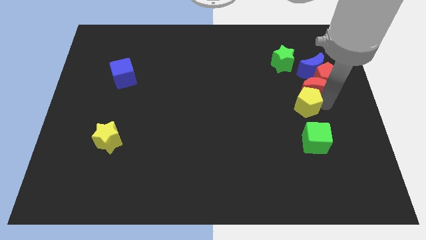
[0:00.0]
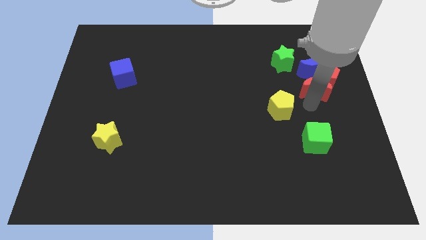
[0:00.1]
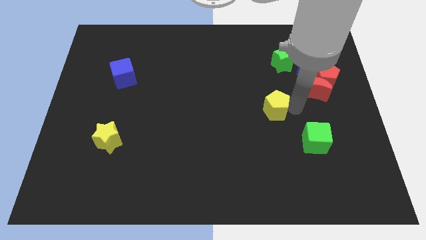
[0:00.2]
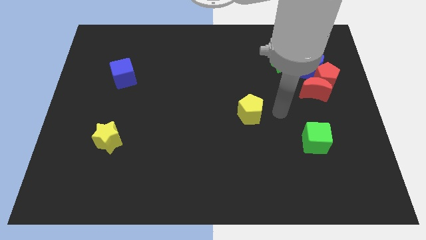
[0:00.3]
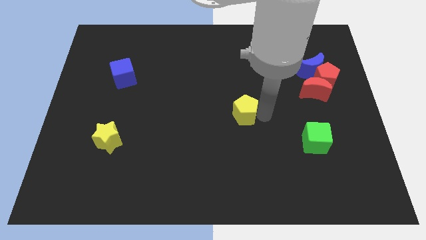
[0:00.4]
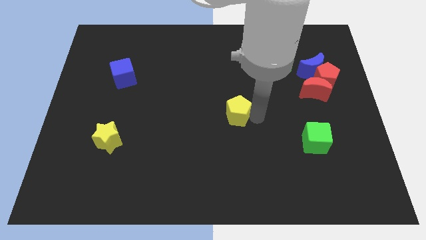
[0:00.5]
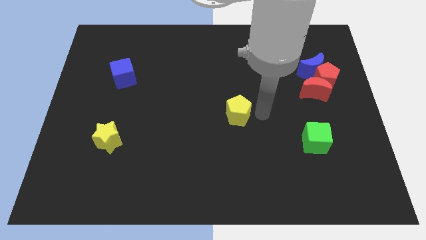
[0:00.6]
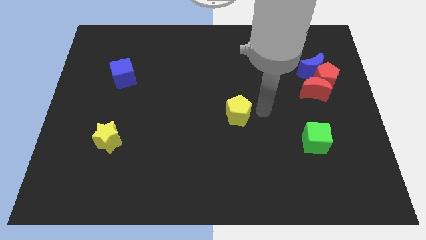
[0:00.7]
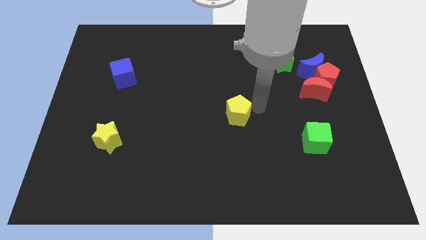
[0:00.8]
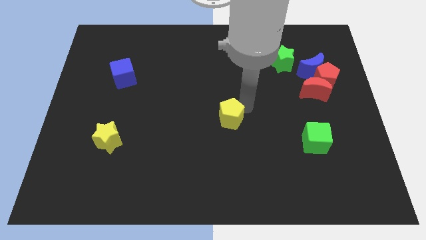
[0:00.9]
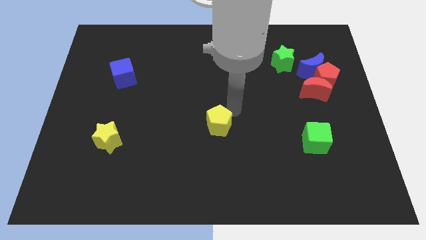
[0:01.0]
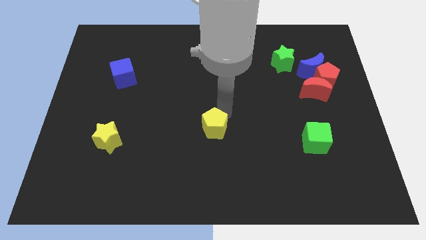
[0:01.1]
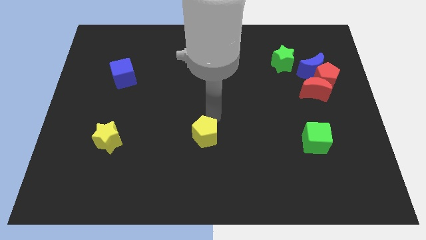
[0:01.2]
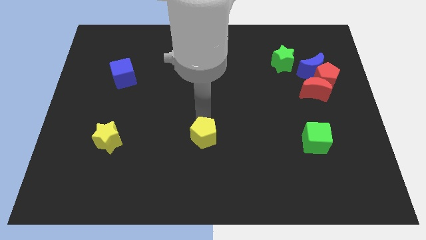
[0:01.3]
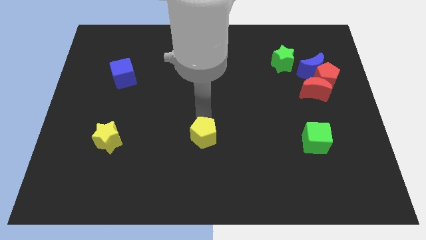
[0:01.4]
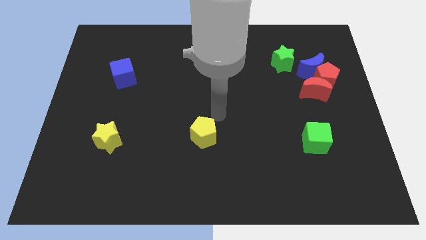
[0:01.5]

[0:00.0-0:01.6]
place the yellow pentagon in between the green cube and yellow star

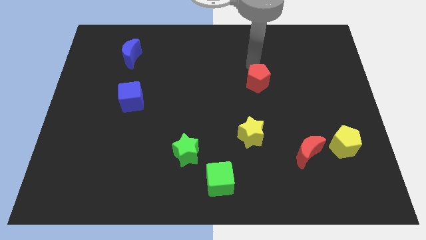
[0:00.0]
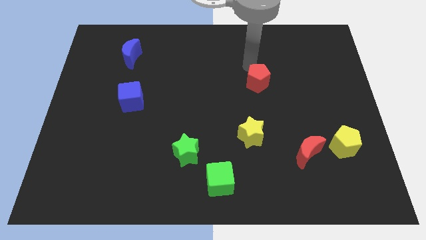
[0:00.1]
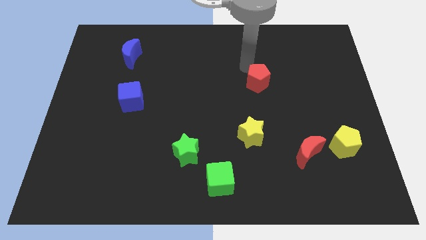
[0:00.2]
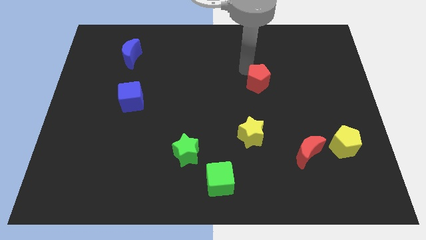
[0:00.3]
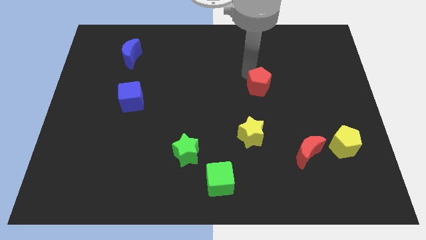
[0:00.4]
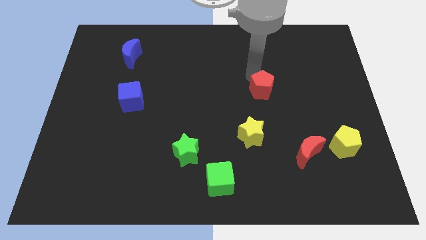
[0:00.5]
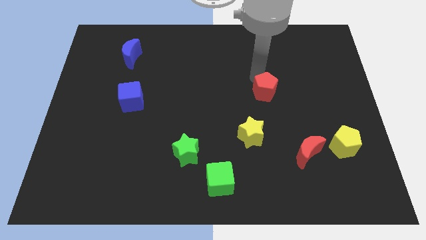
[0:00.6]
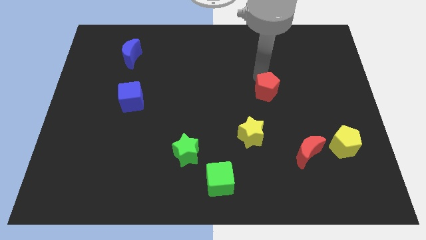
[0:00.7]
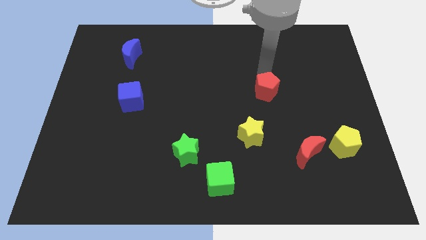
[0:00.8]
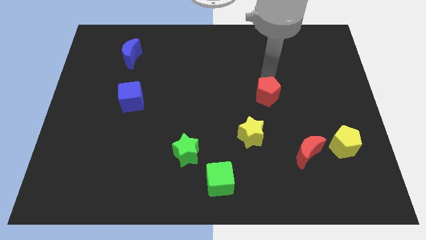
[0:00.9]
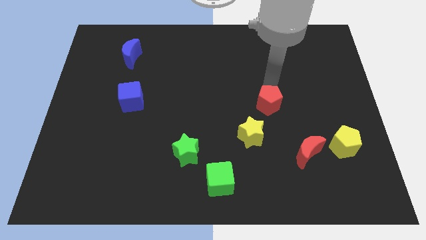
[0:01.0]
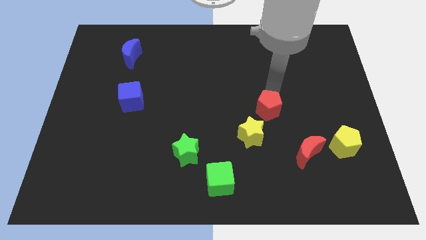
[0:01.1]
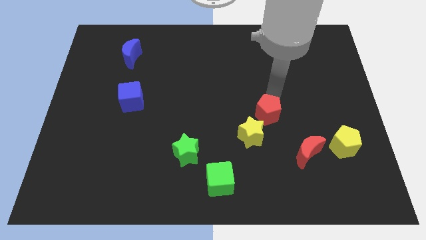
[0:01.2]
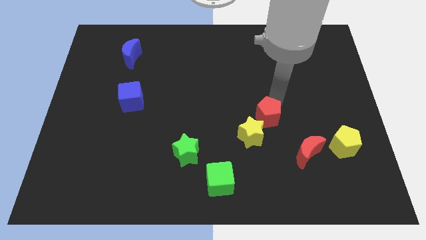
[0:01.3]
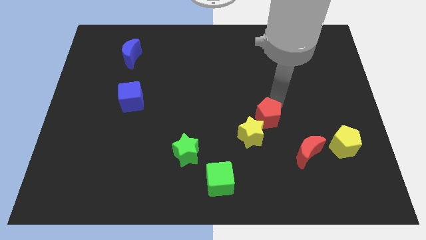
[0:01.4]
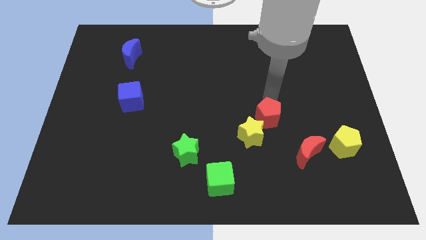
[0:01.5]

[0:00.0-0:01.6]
move the red pentagon close to the yellow star

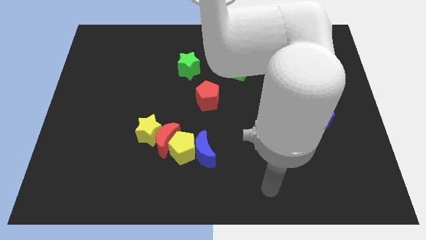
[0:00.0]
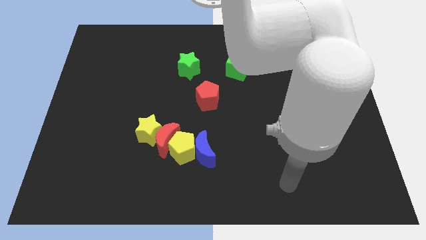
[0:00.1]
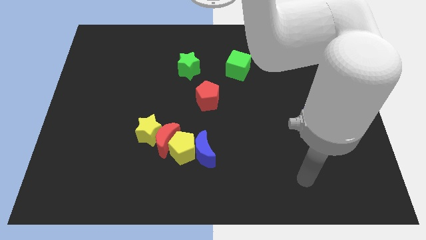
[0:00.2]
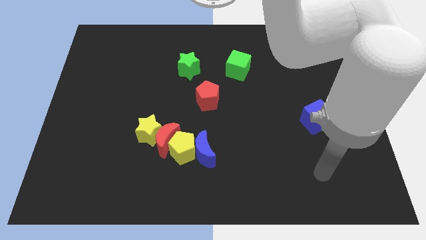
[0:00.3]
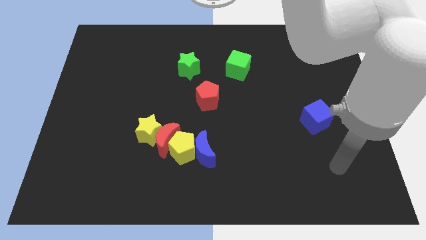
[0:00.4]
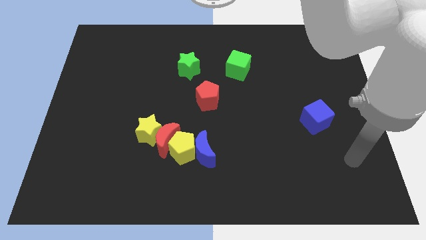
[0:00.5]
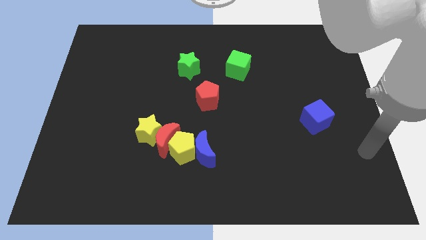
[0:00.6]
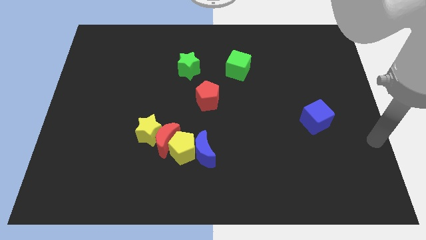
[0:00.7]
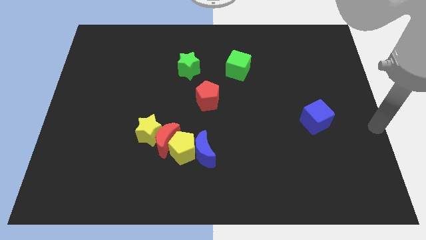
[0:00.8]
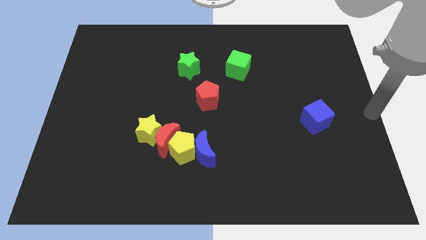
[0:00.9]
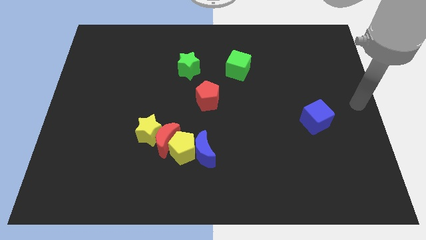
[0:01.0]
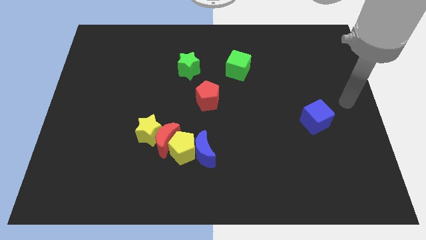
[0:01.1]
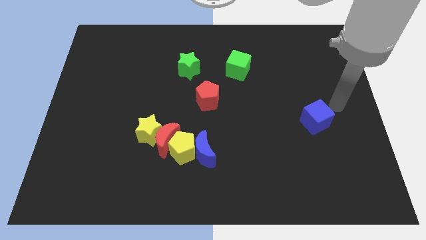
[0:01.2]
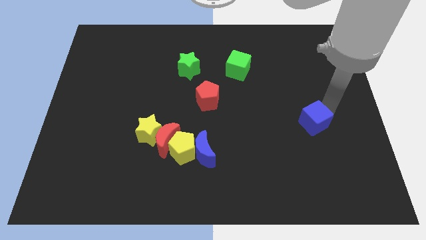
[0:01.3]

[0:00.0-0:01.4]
push your arm at the top right side of the blue cube

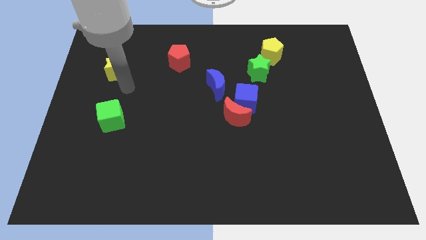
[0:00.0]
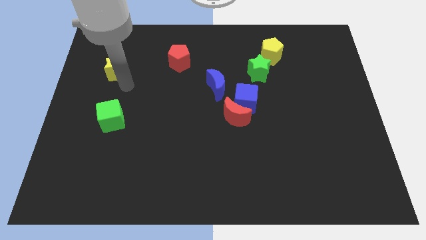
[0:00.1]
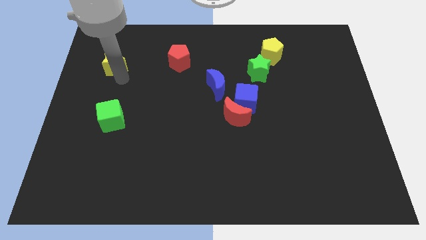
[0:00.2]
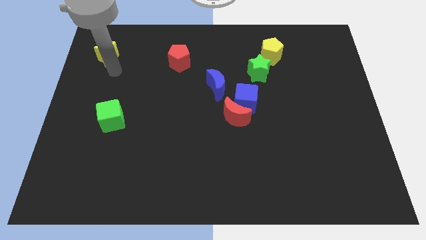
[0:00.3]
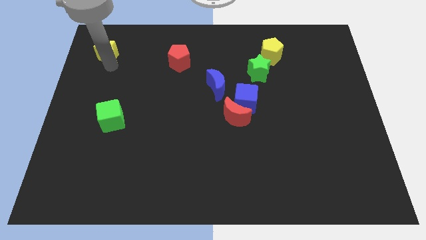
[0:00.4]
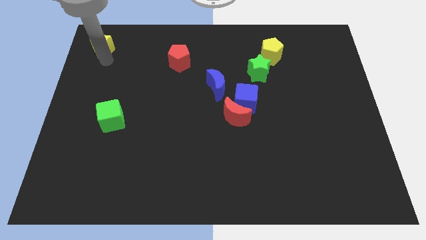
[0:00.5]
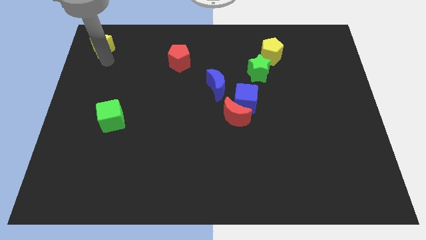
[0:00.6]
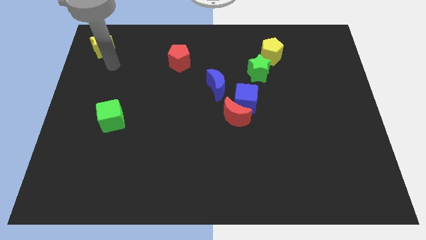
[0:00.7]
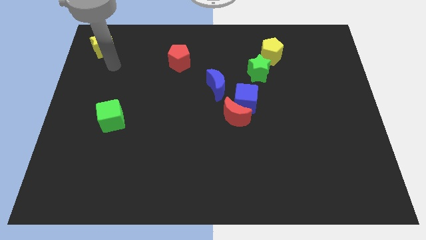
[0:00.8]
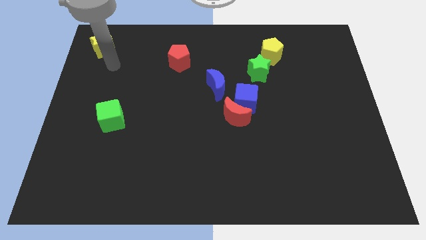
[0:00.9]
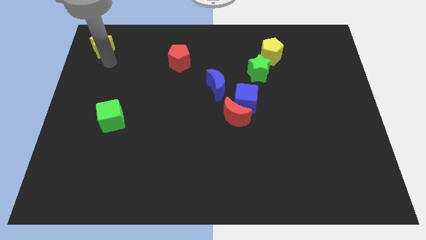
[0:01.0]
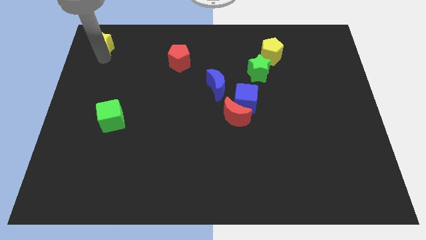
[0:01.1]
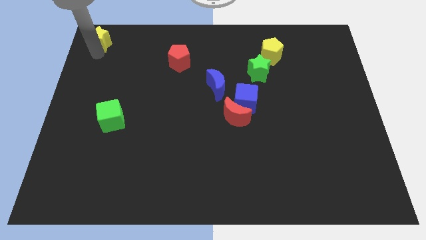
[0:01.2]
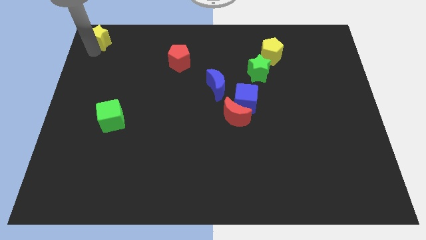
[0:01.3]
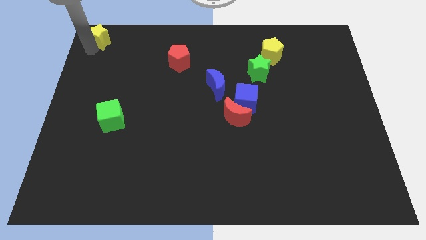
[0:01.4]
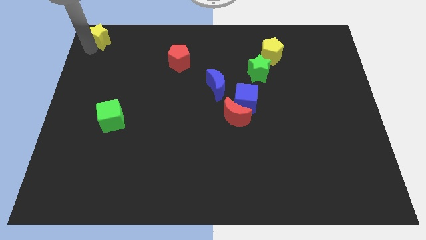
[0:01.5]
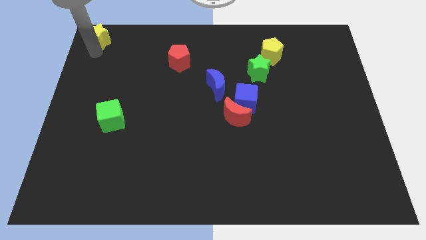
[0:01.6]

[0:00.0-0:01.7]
place the yellow star at the top left corner of the board

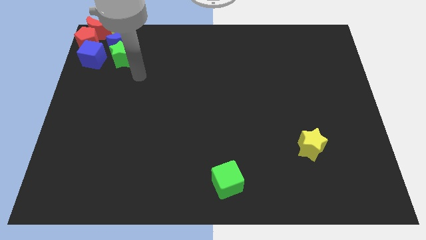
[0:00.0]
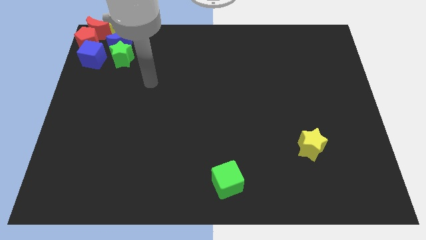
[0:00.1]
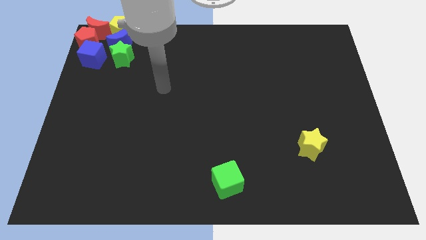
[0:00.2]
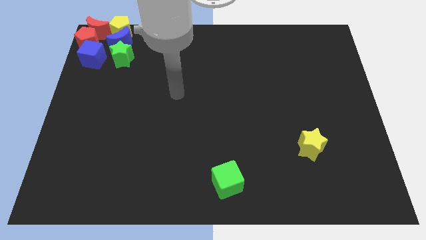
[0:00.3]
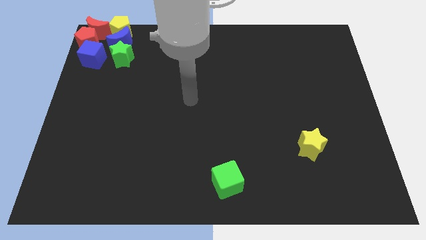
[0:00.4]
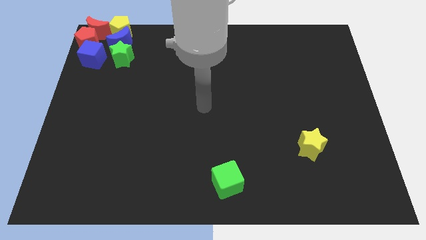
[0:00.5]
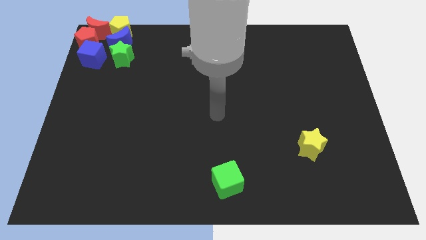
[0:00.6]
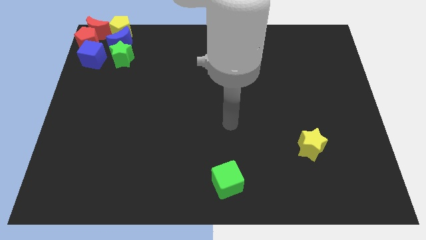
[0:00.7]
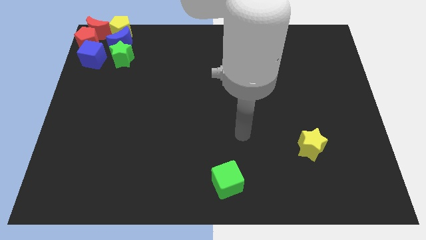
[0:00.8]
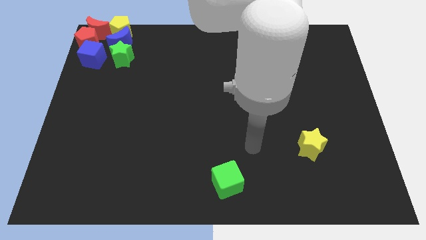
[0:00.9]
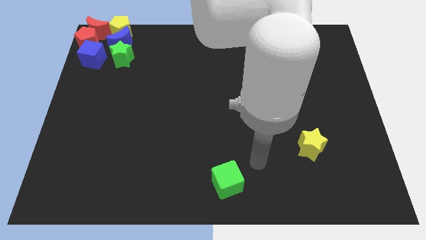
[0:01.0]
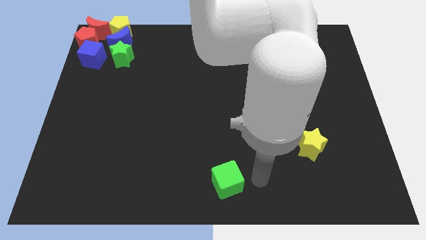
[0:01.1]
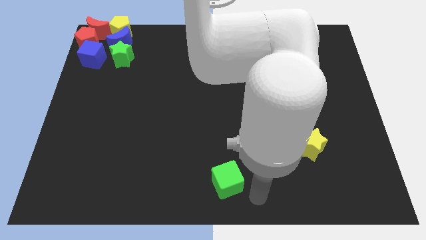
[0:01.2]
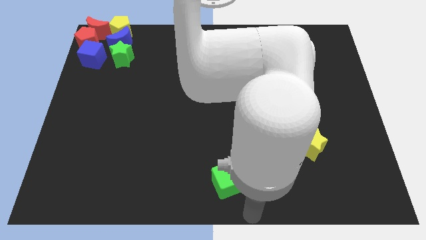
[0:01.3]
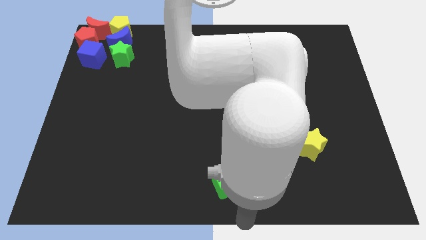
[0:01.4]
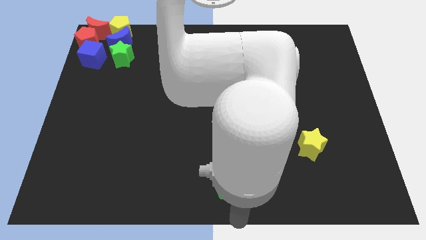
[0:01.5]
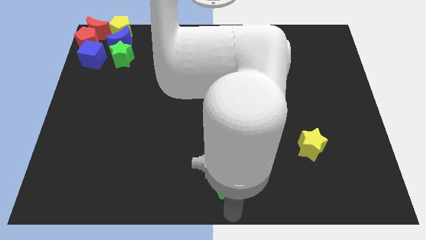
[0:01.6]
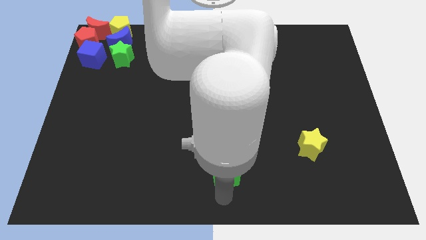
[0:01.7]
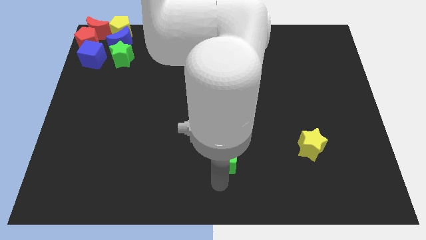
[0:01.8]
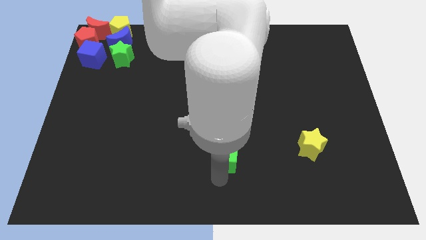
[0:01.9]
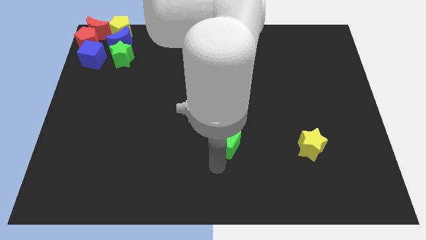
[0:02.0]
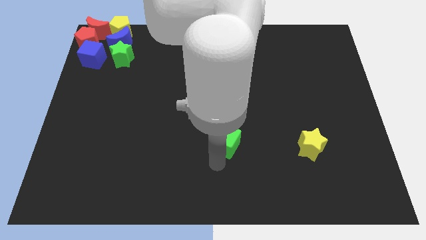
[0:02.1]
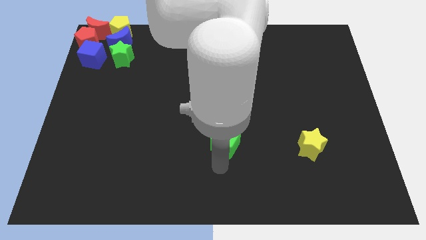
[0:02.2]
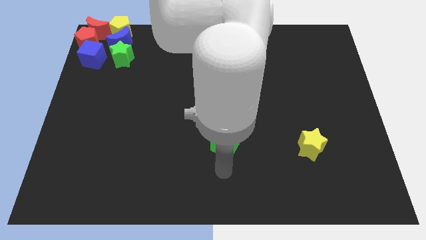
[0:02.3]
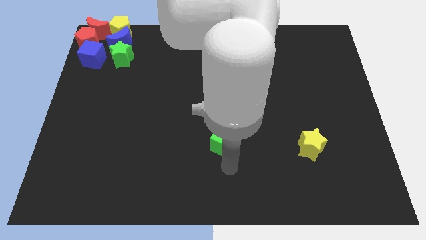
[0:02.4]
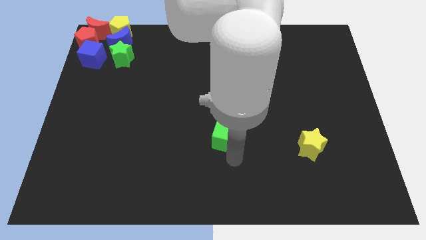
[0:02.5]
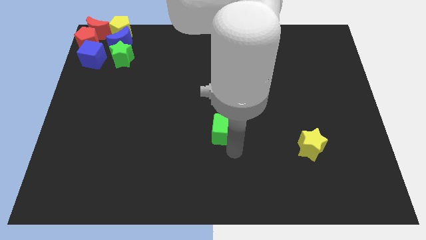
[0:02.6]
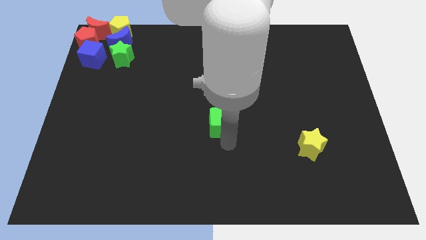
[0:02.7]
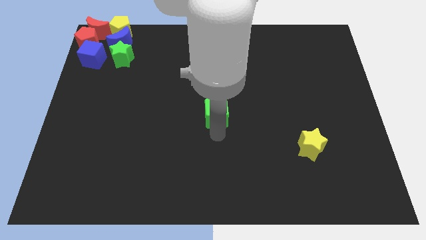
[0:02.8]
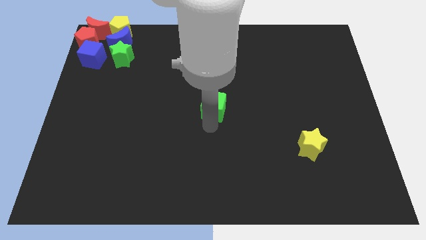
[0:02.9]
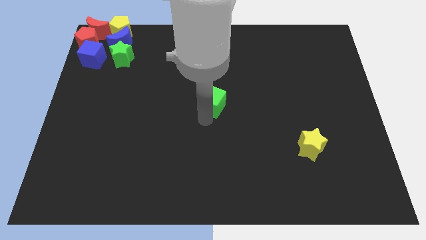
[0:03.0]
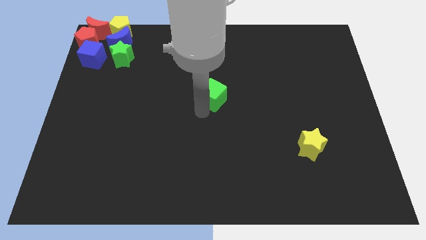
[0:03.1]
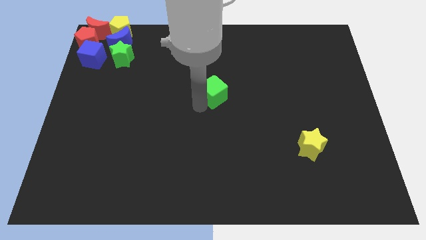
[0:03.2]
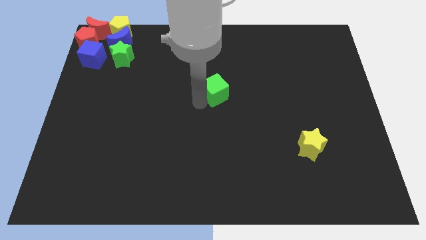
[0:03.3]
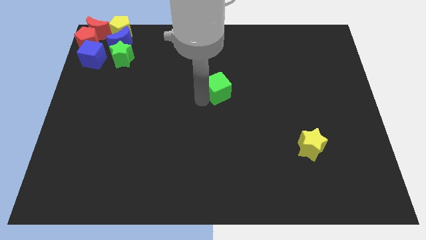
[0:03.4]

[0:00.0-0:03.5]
put the green cube at the center of the board
